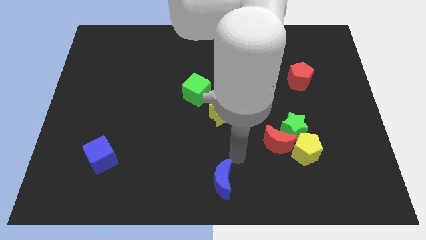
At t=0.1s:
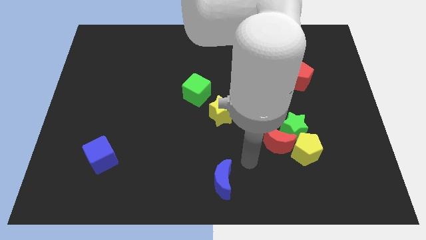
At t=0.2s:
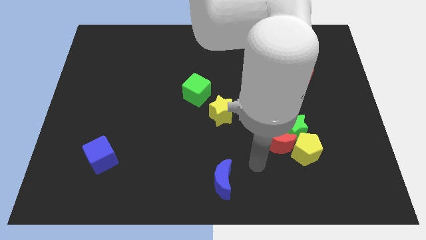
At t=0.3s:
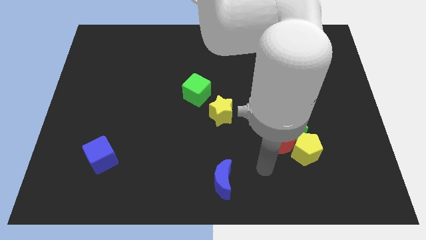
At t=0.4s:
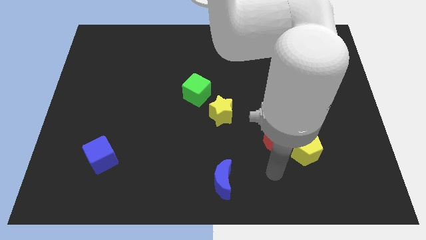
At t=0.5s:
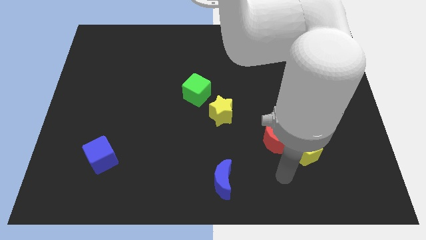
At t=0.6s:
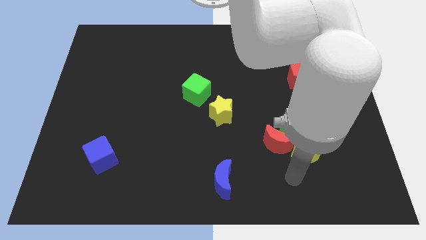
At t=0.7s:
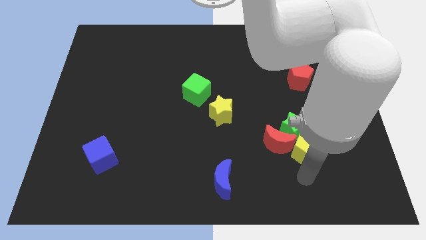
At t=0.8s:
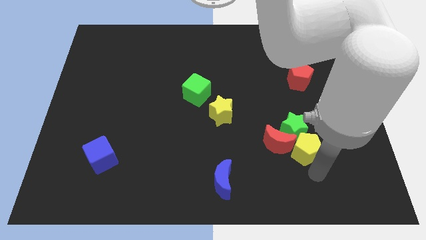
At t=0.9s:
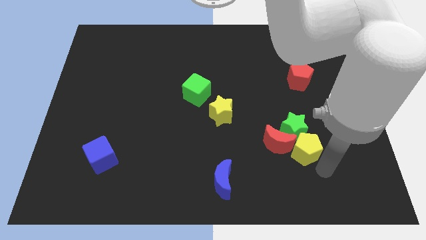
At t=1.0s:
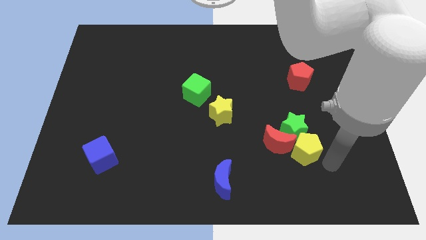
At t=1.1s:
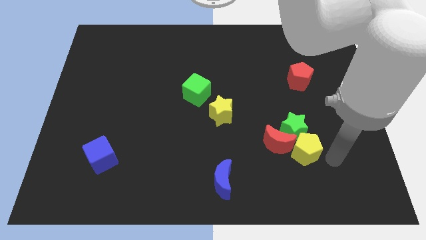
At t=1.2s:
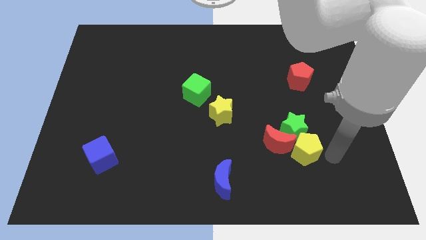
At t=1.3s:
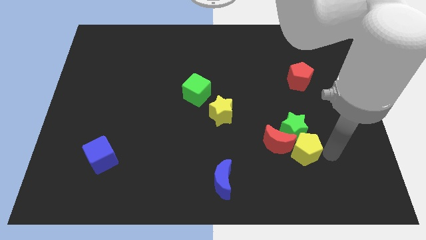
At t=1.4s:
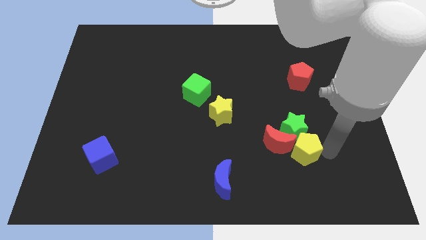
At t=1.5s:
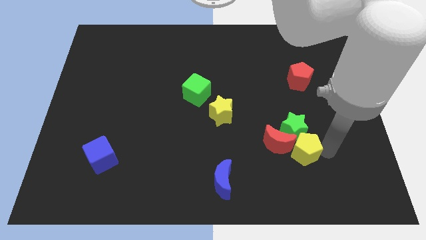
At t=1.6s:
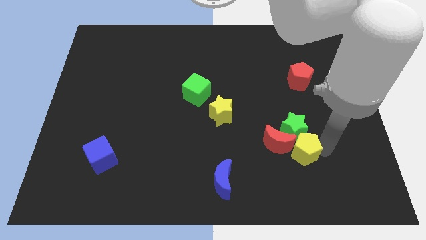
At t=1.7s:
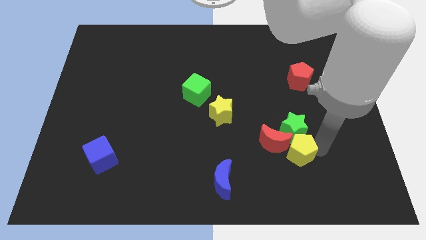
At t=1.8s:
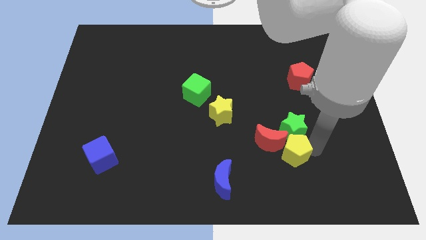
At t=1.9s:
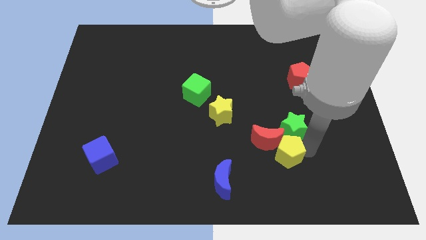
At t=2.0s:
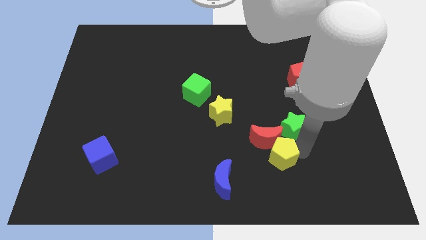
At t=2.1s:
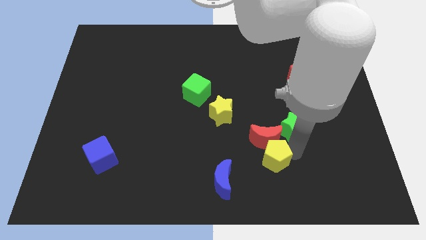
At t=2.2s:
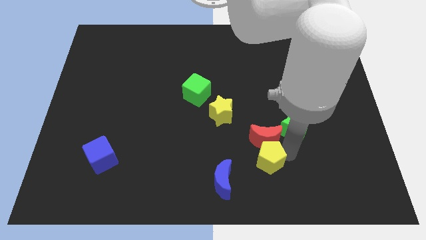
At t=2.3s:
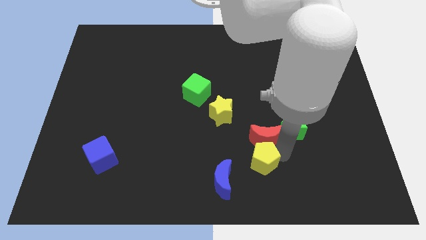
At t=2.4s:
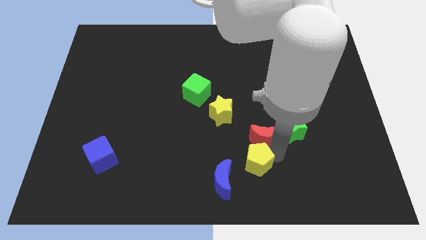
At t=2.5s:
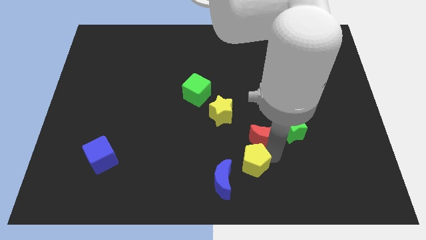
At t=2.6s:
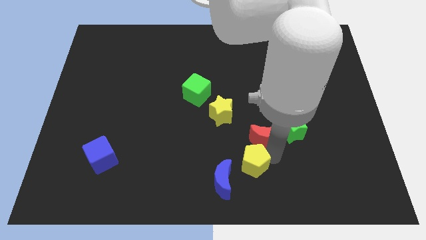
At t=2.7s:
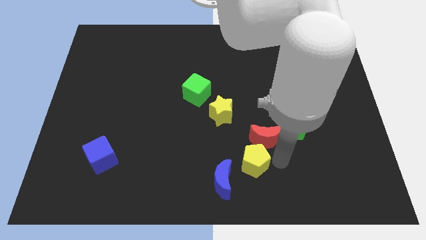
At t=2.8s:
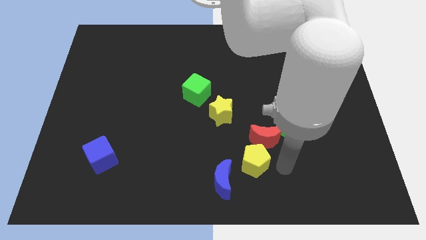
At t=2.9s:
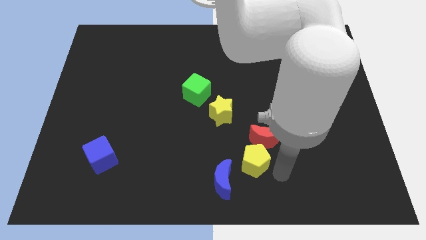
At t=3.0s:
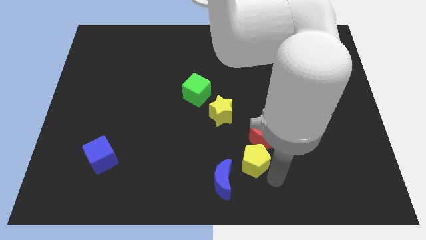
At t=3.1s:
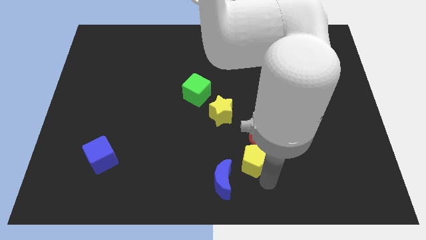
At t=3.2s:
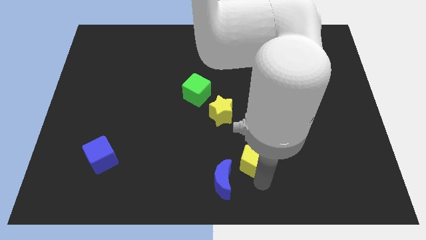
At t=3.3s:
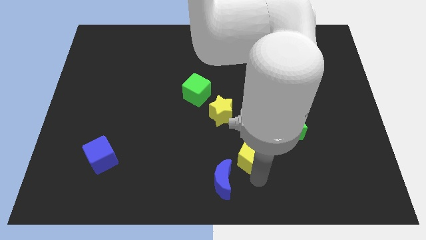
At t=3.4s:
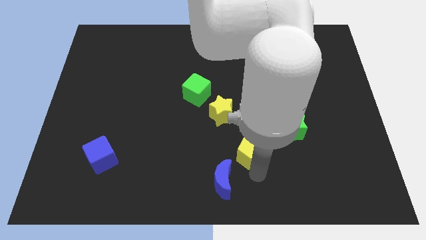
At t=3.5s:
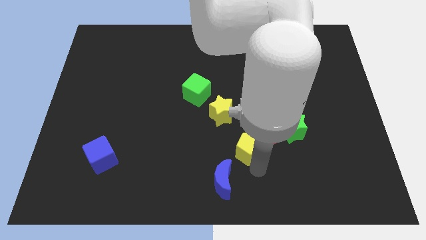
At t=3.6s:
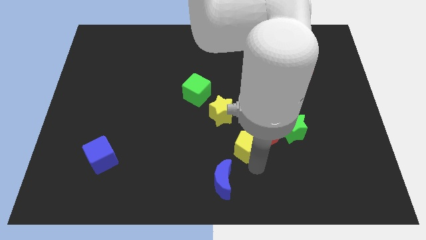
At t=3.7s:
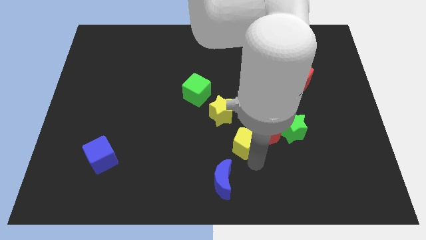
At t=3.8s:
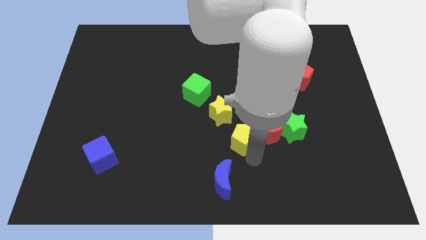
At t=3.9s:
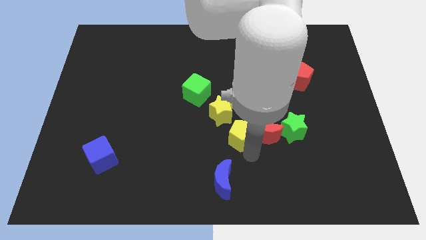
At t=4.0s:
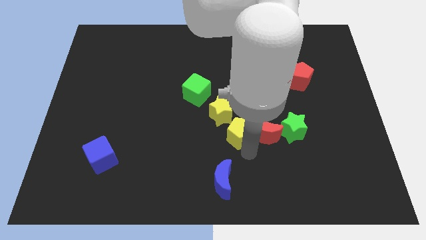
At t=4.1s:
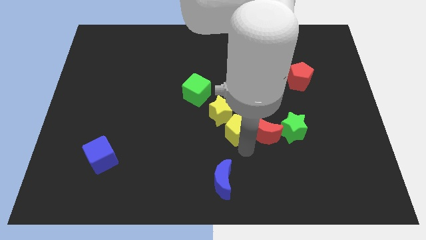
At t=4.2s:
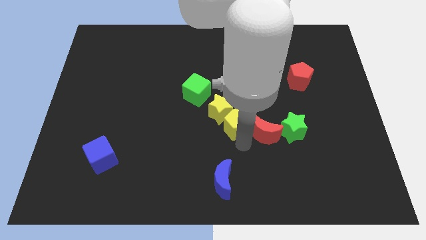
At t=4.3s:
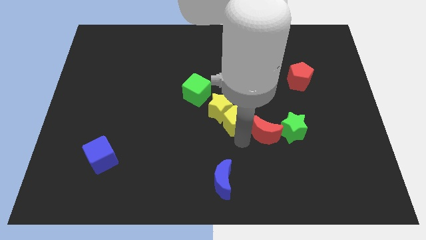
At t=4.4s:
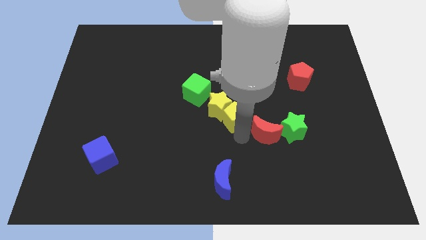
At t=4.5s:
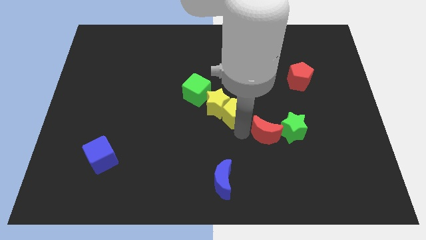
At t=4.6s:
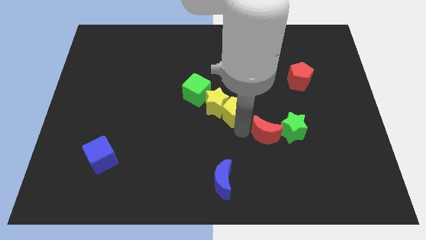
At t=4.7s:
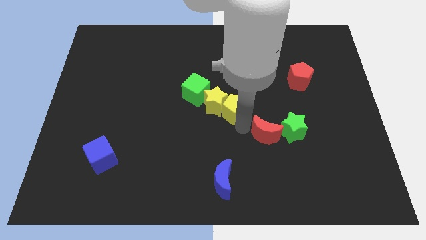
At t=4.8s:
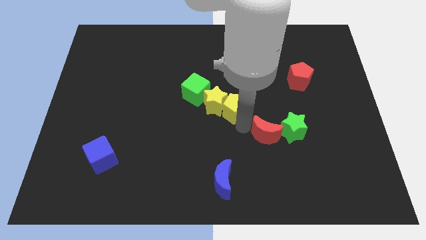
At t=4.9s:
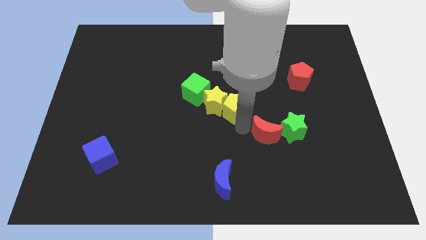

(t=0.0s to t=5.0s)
slide the yellow pentagon into the right side of the yellow star

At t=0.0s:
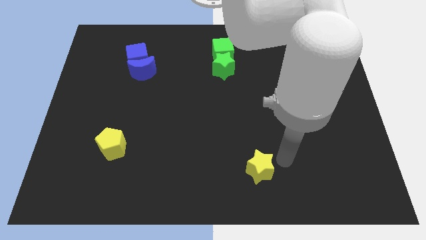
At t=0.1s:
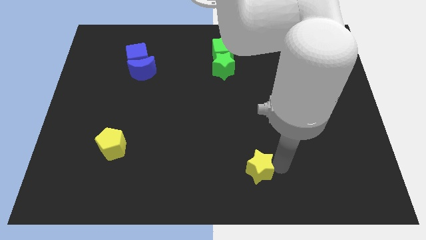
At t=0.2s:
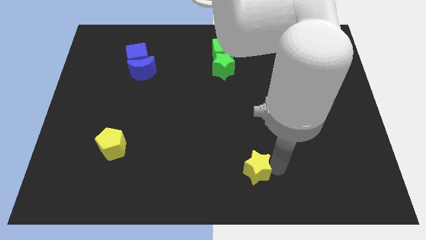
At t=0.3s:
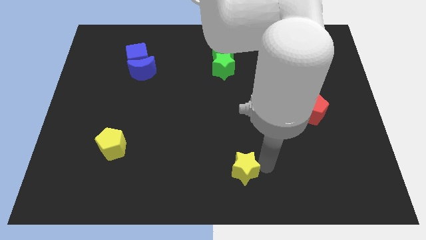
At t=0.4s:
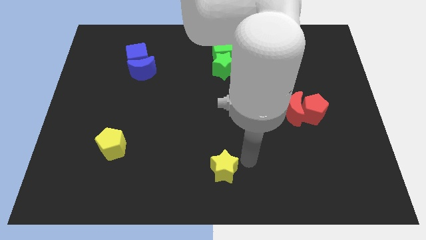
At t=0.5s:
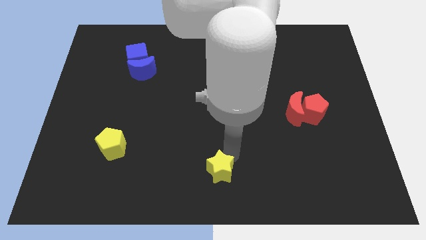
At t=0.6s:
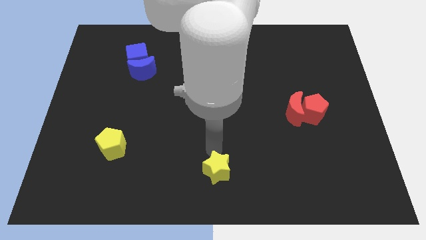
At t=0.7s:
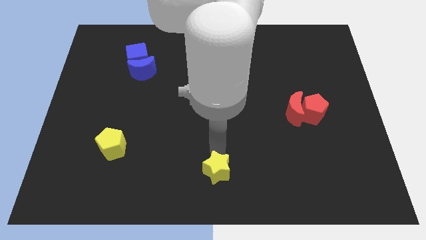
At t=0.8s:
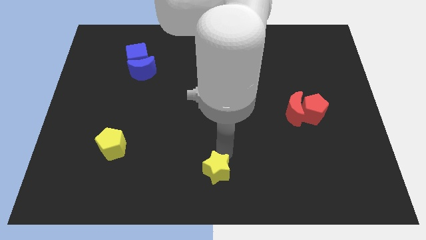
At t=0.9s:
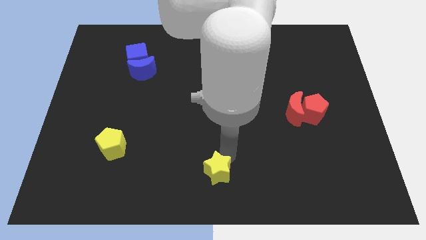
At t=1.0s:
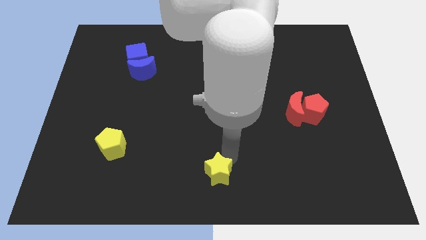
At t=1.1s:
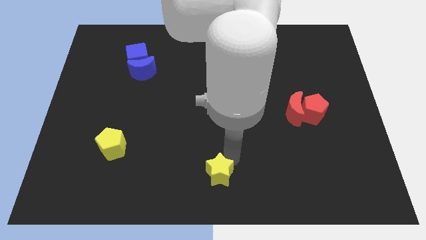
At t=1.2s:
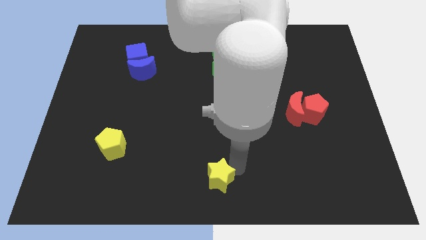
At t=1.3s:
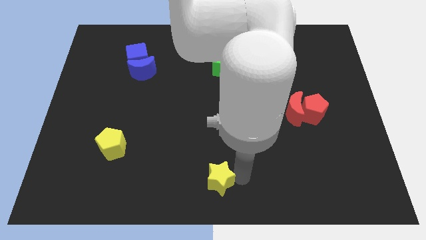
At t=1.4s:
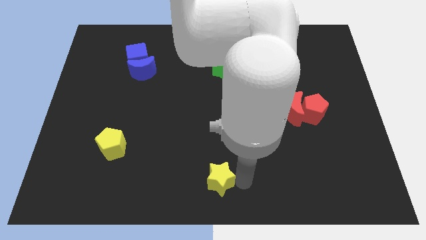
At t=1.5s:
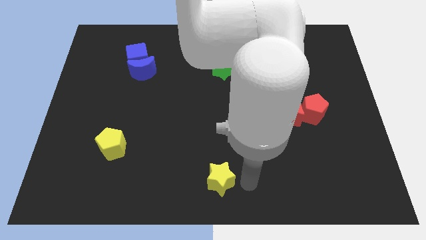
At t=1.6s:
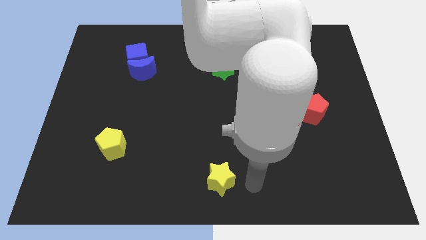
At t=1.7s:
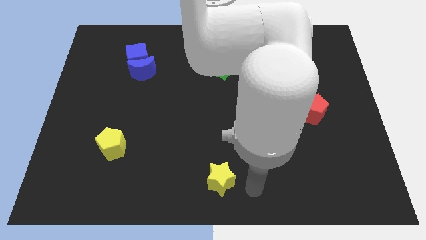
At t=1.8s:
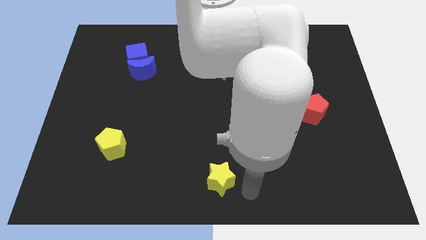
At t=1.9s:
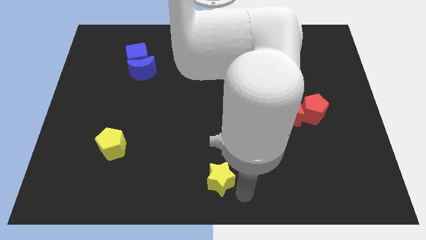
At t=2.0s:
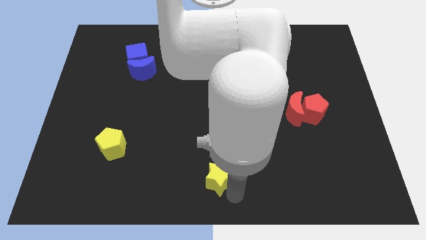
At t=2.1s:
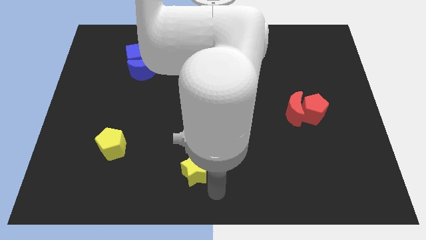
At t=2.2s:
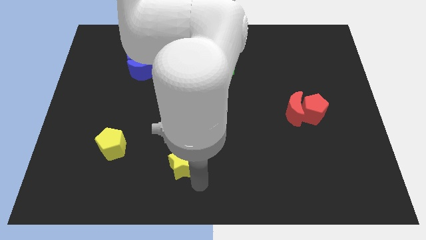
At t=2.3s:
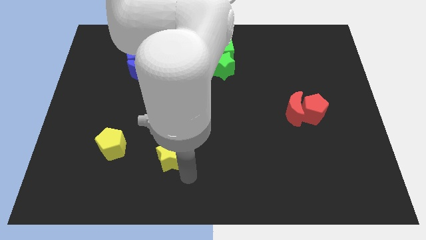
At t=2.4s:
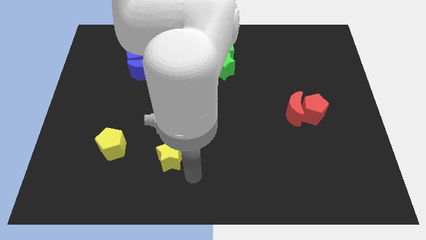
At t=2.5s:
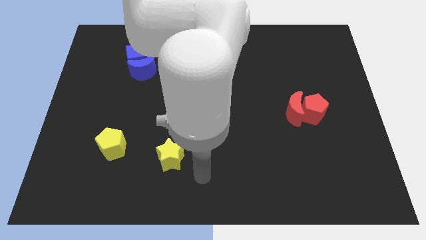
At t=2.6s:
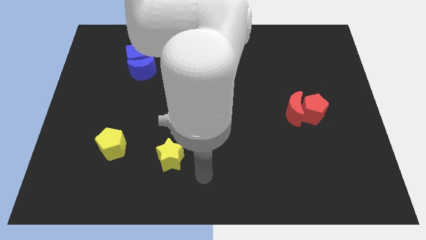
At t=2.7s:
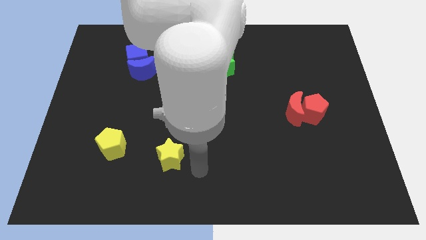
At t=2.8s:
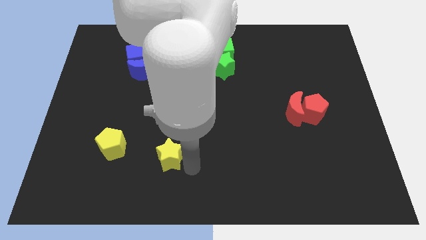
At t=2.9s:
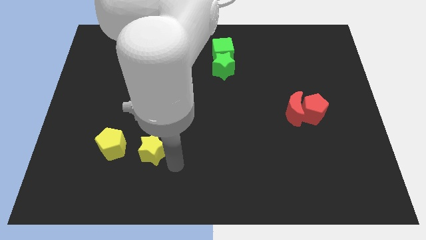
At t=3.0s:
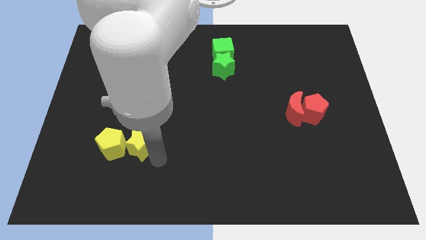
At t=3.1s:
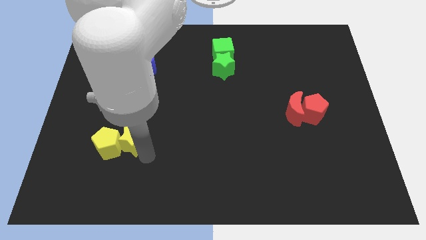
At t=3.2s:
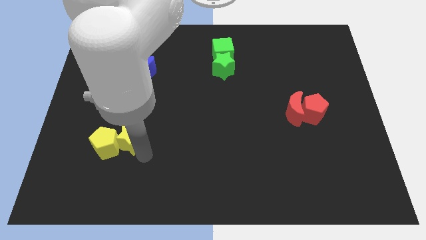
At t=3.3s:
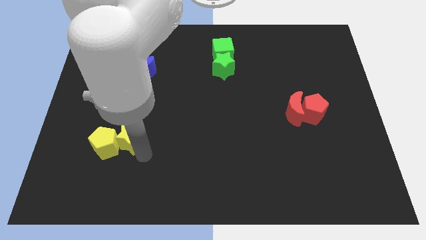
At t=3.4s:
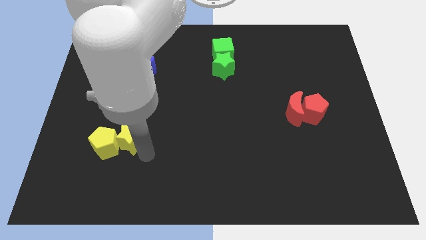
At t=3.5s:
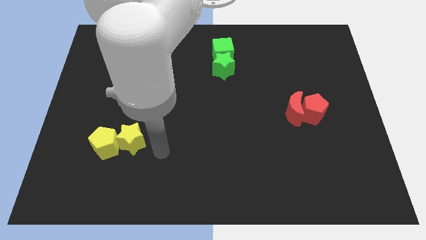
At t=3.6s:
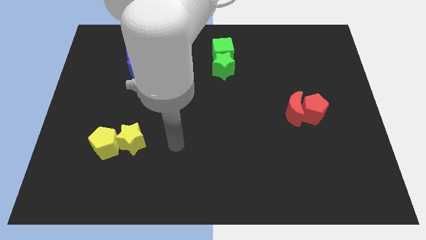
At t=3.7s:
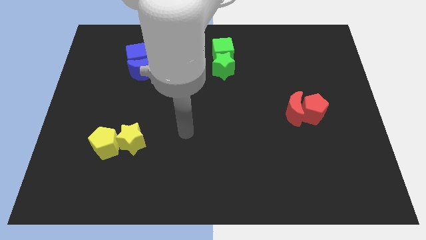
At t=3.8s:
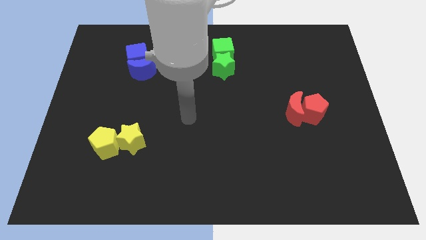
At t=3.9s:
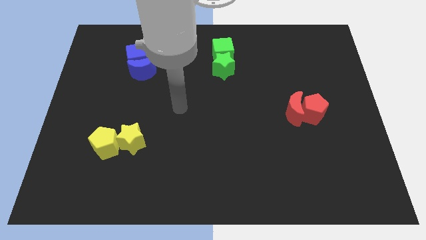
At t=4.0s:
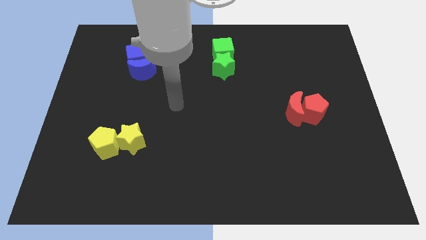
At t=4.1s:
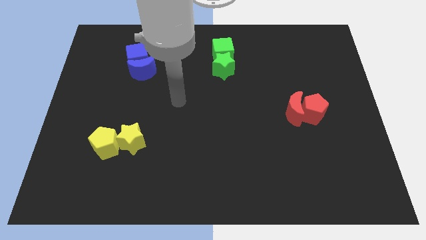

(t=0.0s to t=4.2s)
push the yellow star into the yellow pentagon
